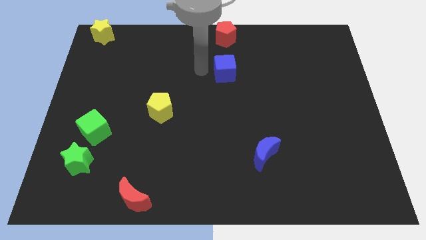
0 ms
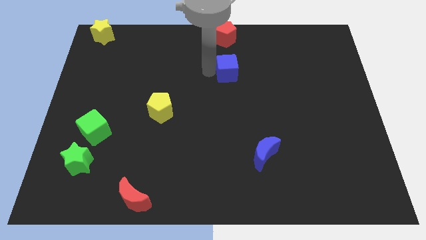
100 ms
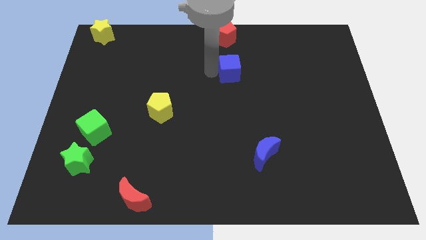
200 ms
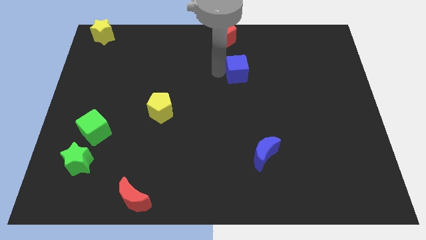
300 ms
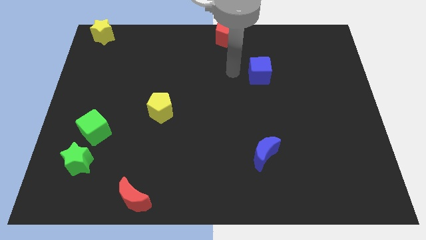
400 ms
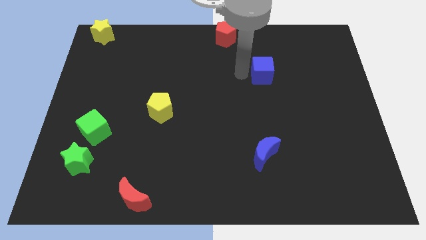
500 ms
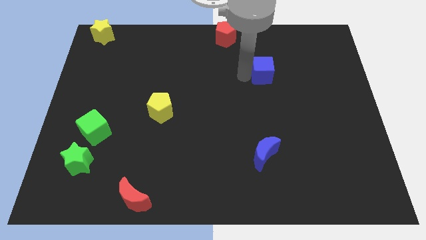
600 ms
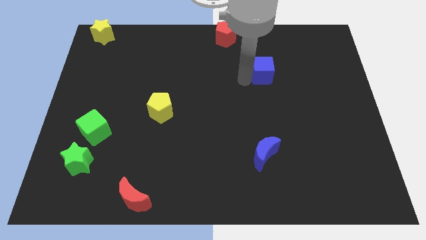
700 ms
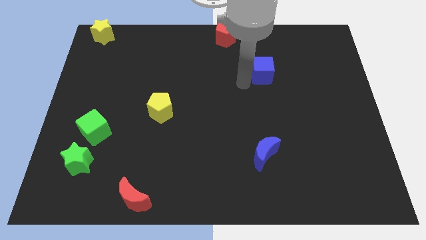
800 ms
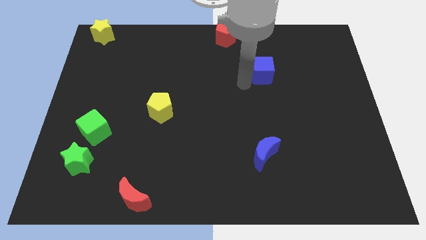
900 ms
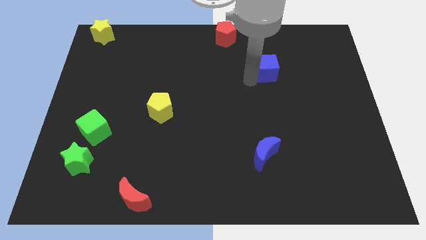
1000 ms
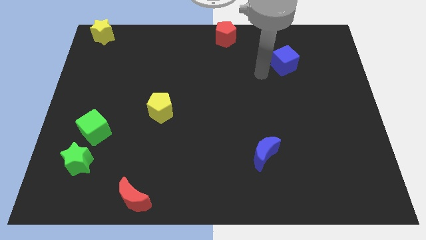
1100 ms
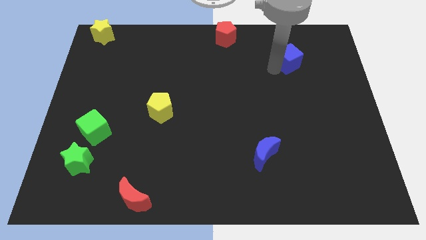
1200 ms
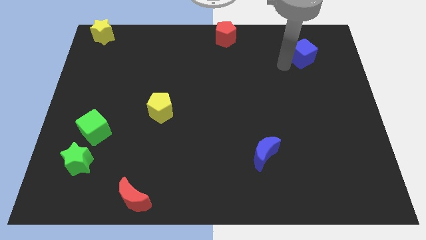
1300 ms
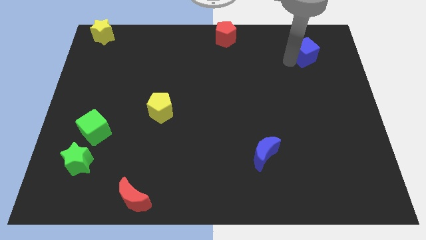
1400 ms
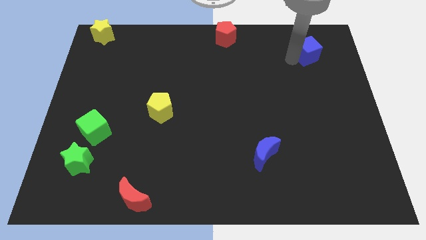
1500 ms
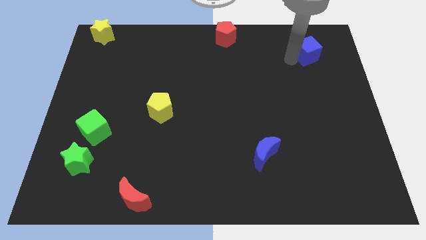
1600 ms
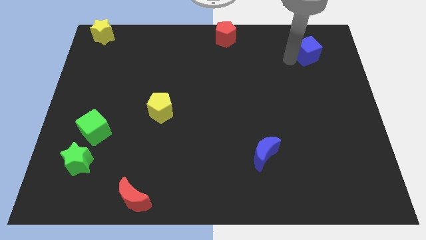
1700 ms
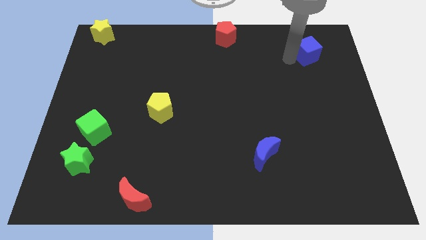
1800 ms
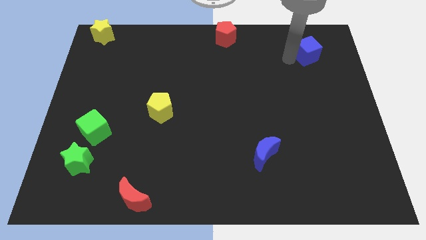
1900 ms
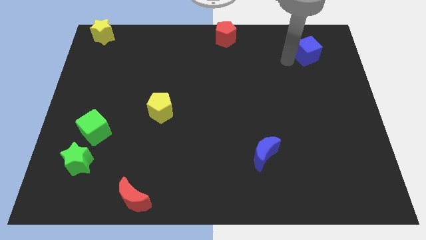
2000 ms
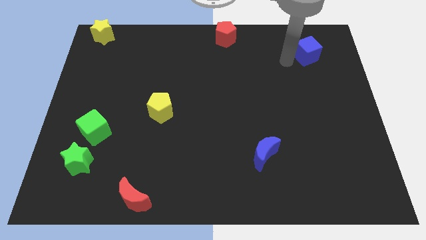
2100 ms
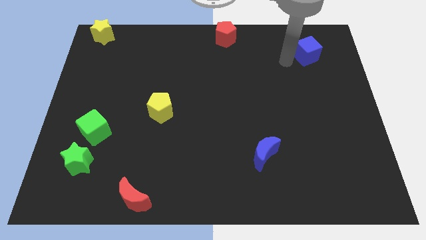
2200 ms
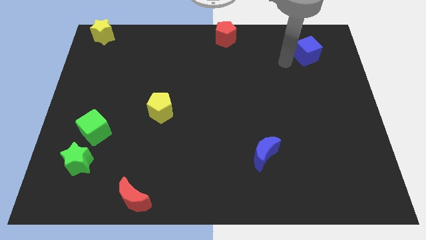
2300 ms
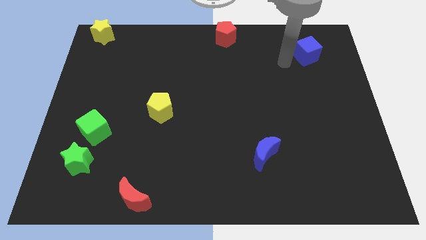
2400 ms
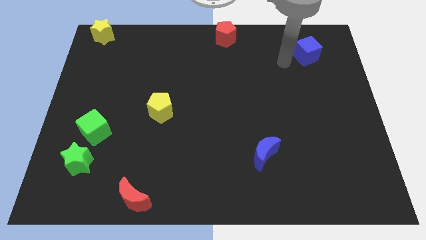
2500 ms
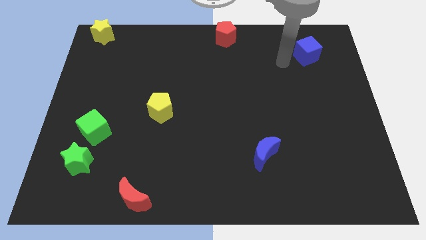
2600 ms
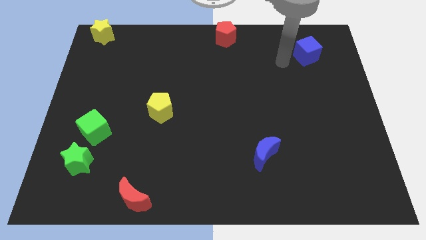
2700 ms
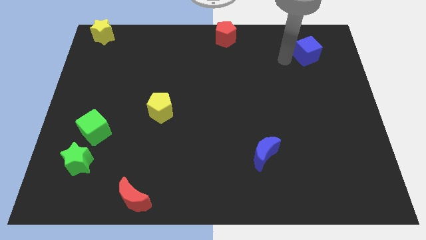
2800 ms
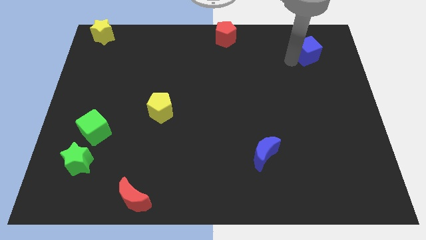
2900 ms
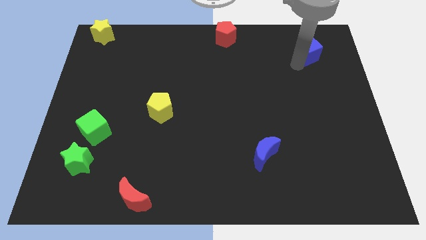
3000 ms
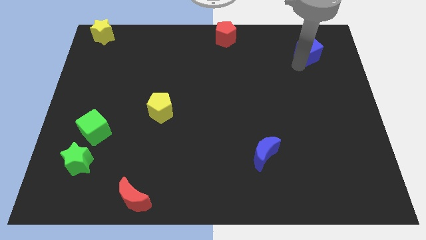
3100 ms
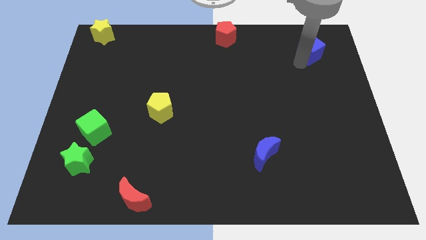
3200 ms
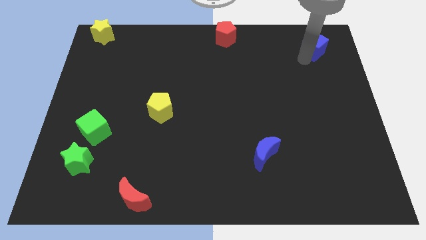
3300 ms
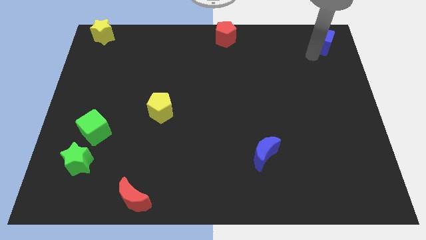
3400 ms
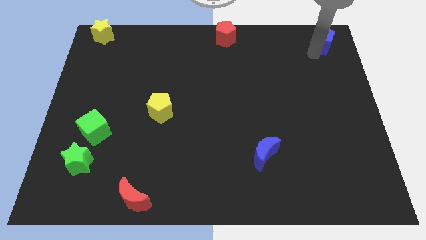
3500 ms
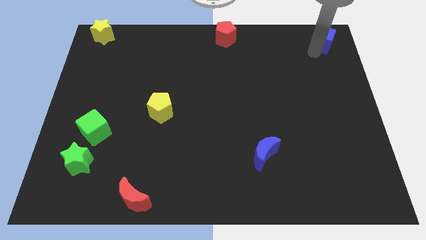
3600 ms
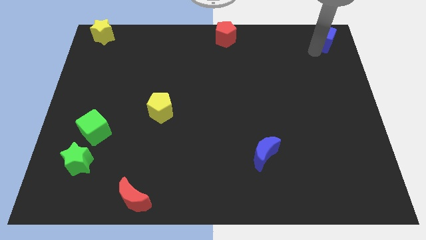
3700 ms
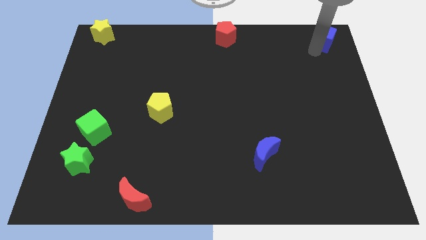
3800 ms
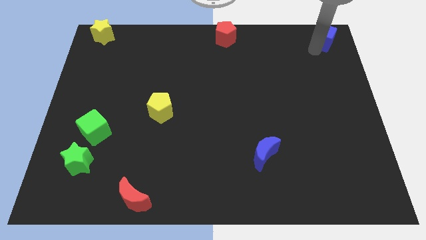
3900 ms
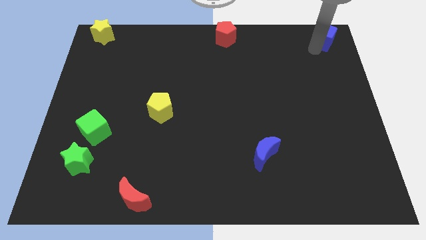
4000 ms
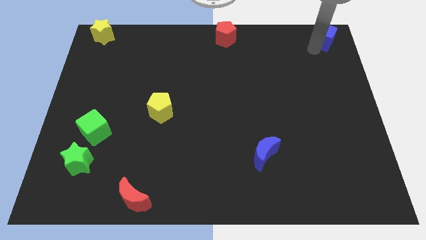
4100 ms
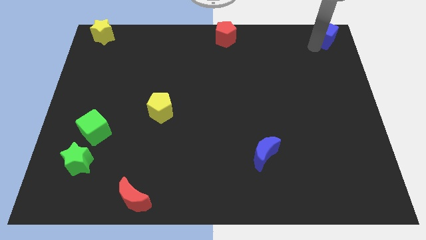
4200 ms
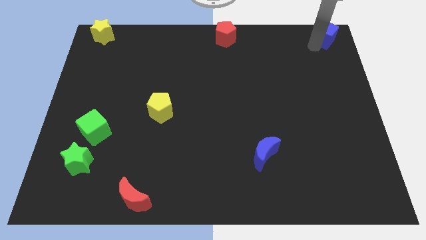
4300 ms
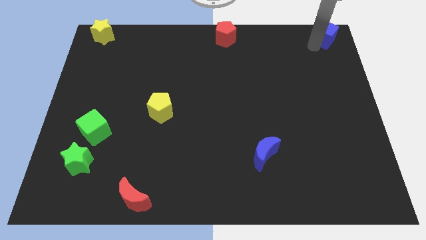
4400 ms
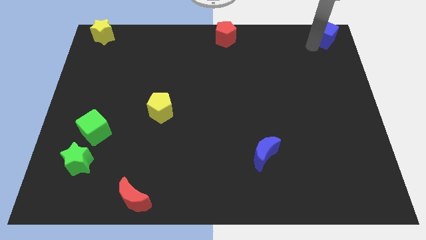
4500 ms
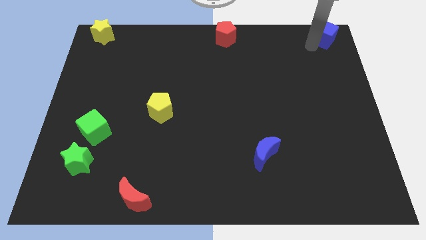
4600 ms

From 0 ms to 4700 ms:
move blue cube to the top right corner

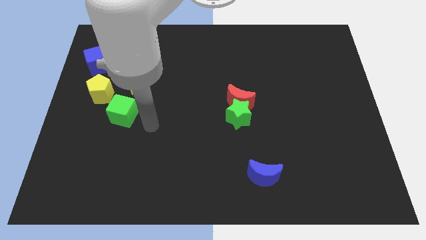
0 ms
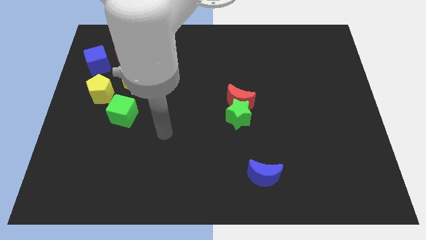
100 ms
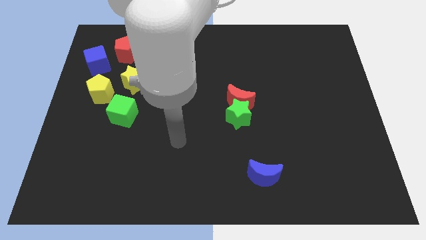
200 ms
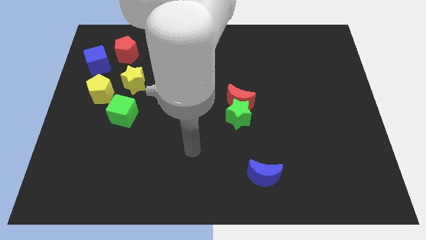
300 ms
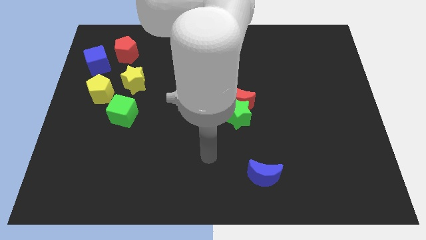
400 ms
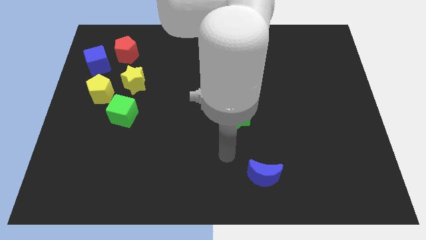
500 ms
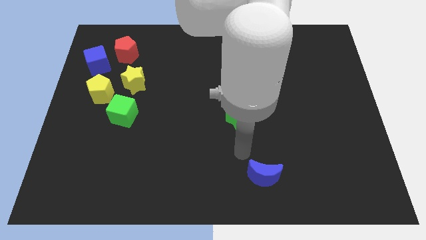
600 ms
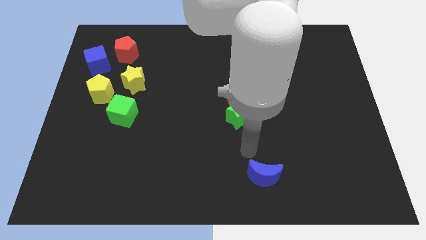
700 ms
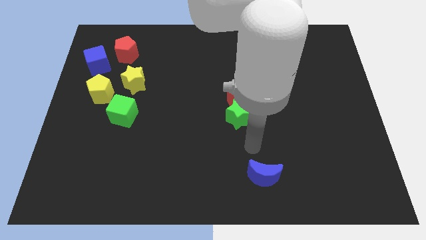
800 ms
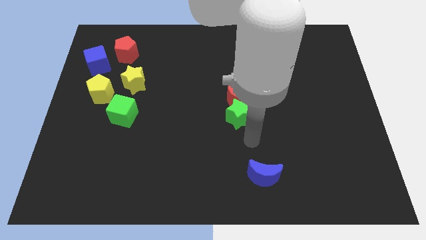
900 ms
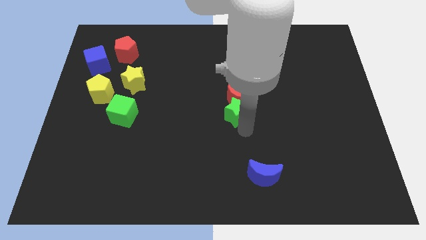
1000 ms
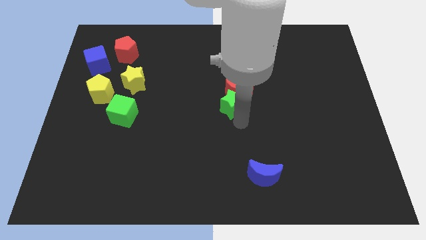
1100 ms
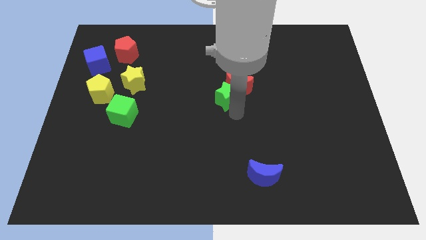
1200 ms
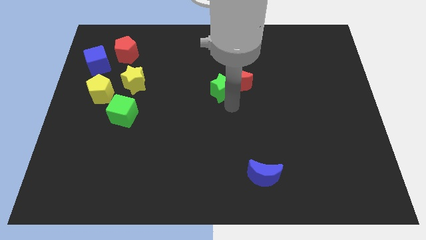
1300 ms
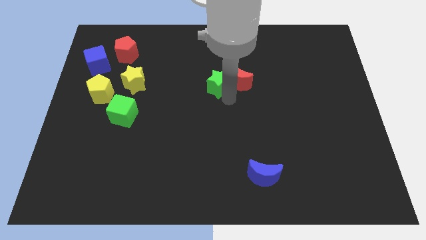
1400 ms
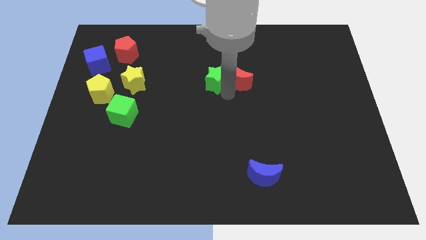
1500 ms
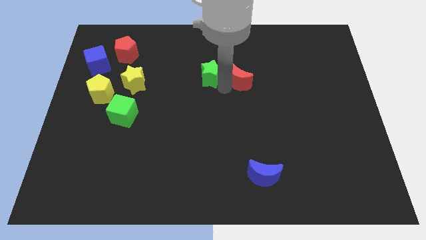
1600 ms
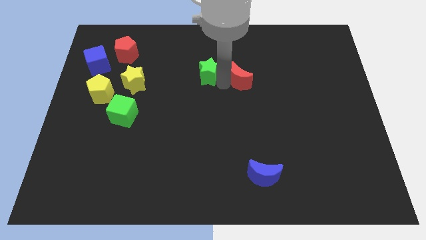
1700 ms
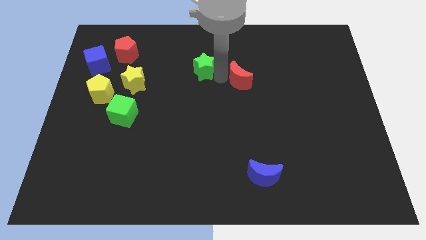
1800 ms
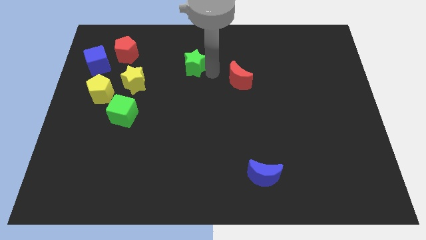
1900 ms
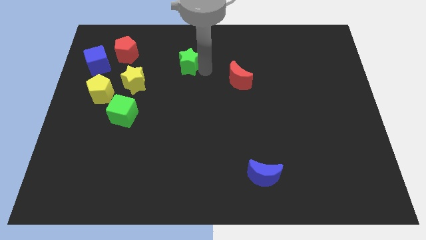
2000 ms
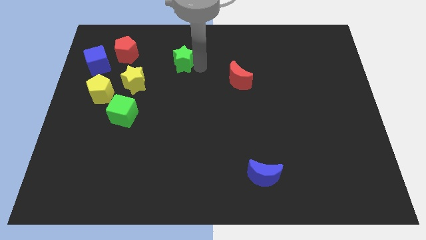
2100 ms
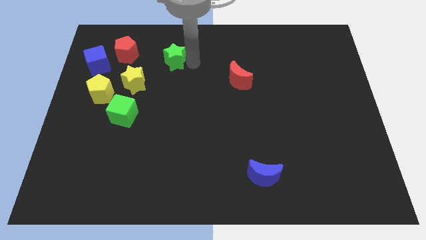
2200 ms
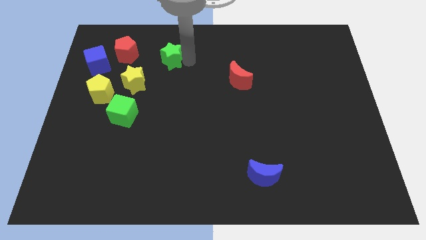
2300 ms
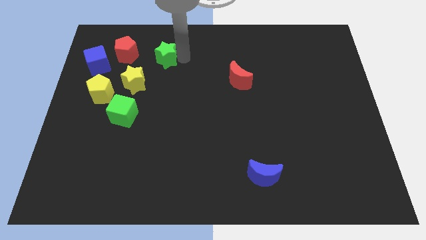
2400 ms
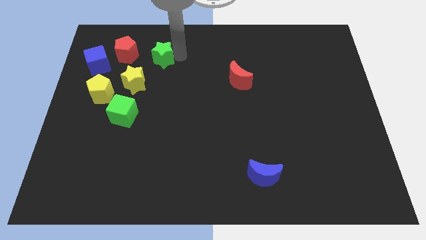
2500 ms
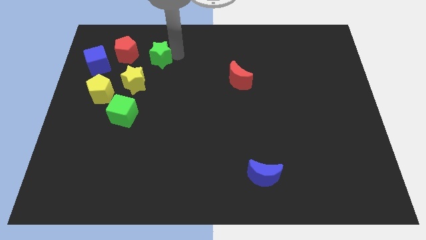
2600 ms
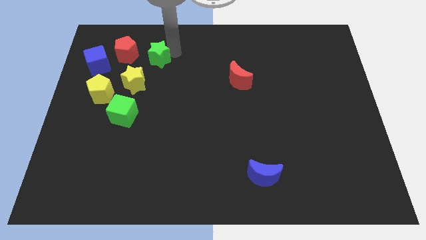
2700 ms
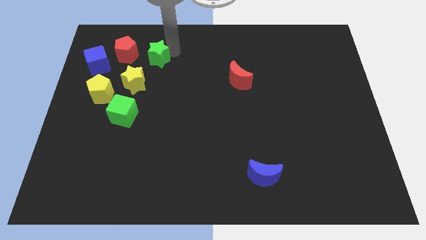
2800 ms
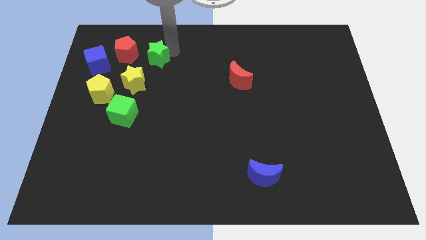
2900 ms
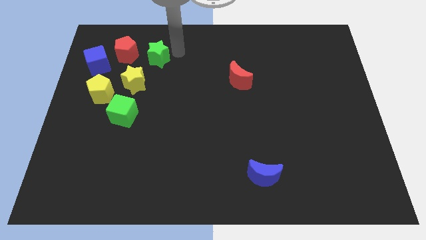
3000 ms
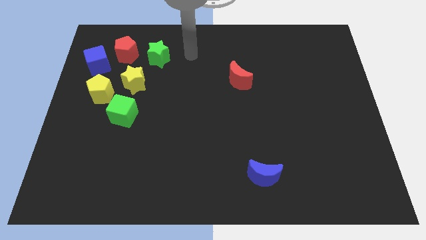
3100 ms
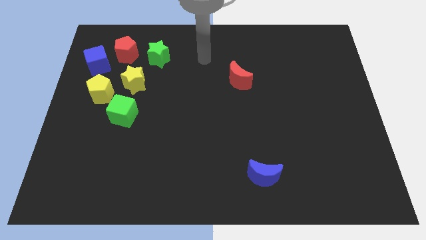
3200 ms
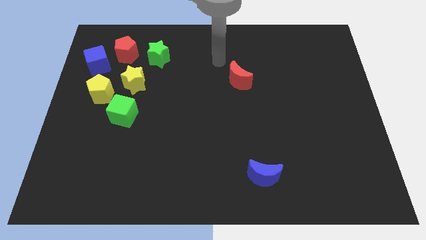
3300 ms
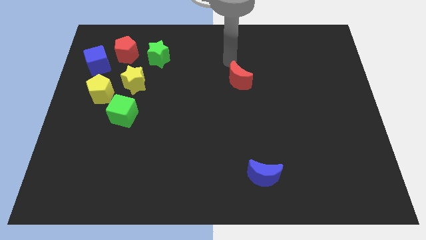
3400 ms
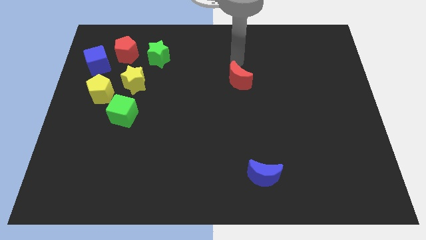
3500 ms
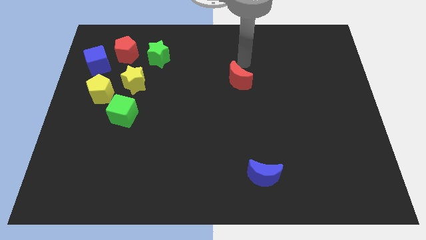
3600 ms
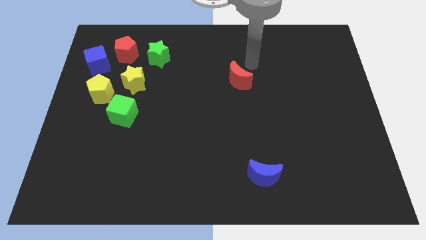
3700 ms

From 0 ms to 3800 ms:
push the green star to the right of the red pentagon

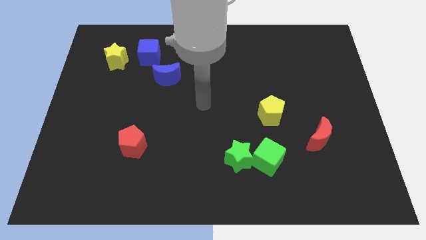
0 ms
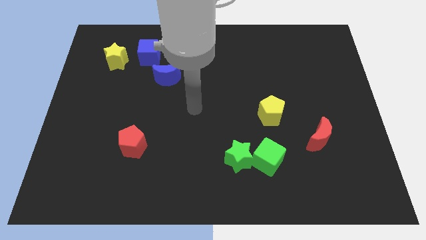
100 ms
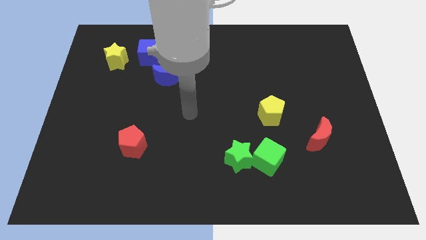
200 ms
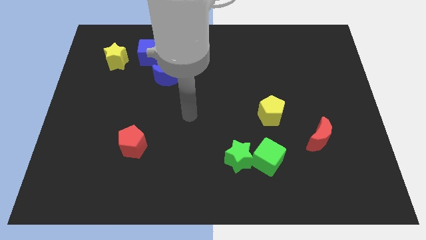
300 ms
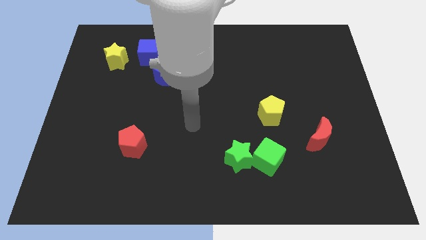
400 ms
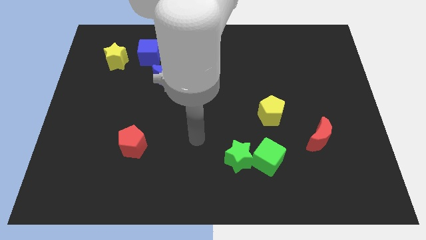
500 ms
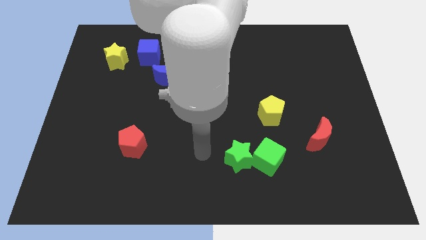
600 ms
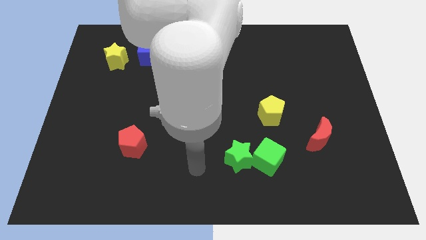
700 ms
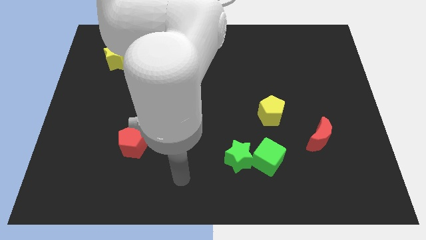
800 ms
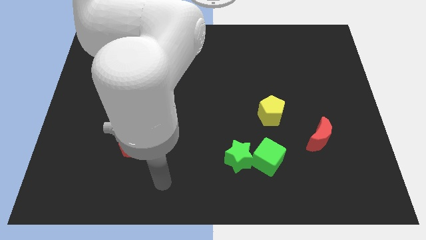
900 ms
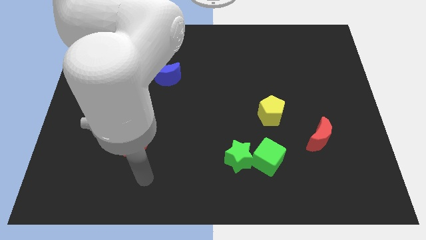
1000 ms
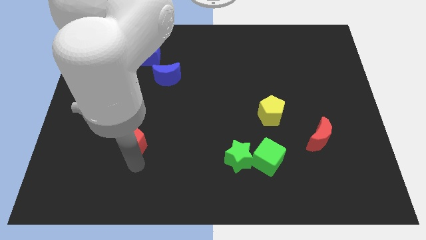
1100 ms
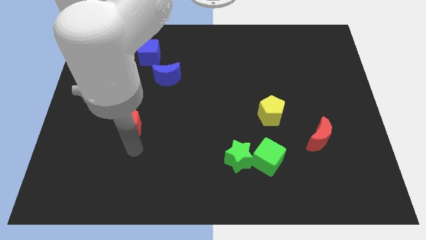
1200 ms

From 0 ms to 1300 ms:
place your arm to the bottom of red pentagon
